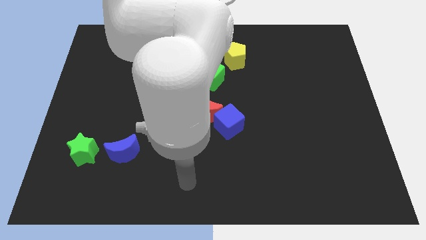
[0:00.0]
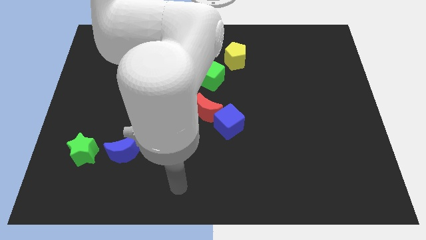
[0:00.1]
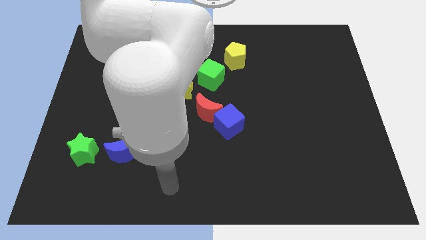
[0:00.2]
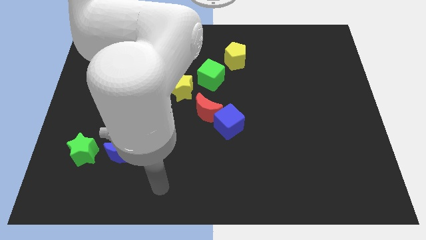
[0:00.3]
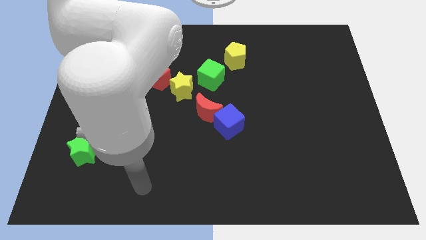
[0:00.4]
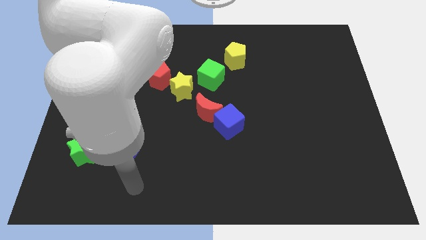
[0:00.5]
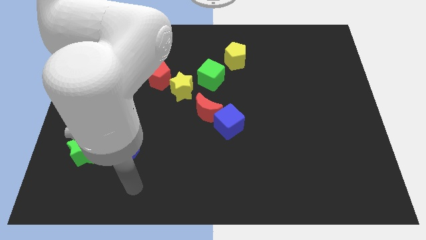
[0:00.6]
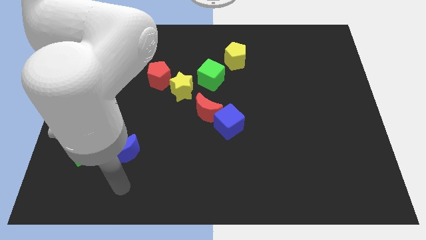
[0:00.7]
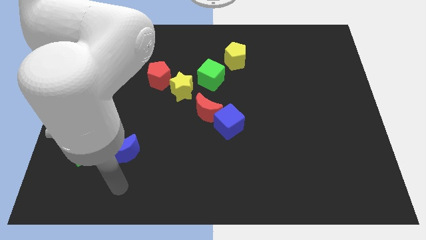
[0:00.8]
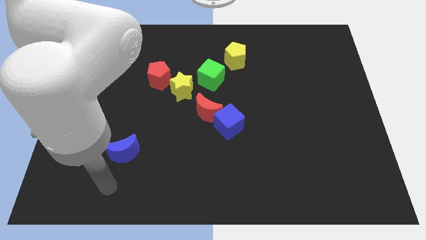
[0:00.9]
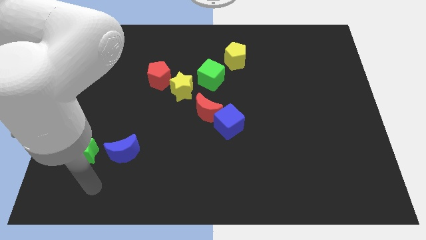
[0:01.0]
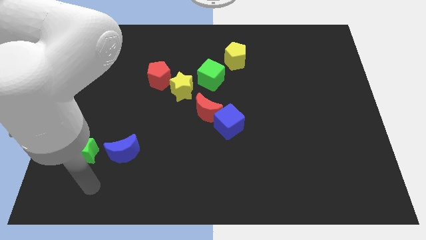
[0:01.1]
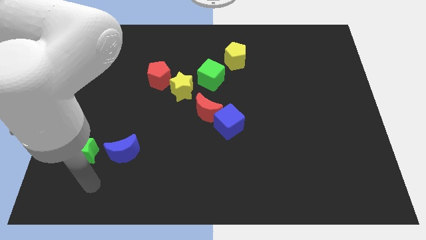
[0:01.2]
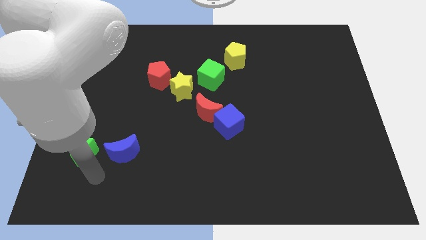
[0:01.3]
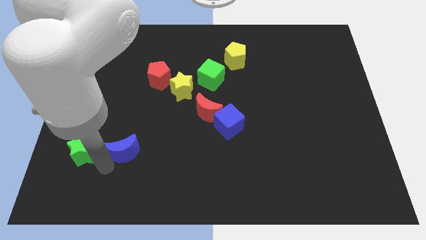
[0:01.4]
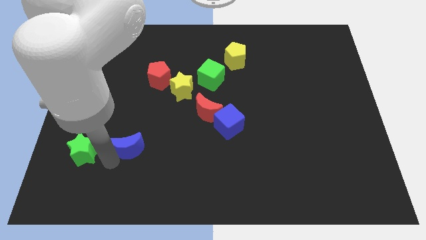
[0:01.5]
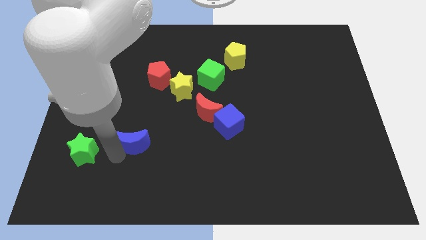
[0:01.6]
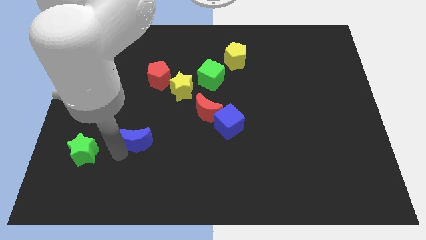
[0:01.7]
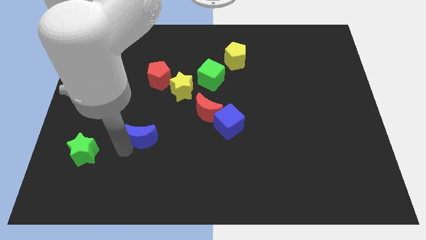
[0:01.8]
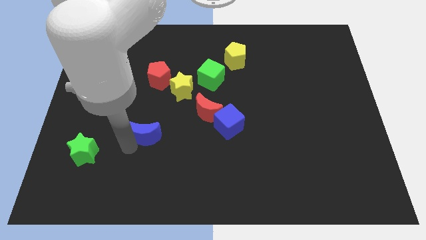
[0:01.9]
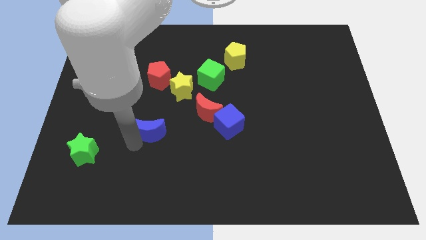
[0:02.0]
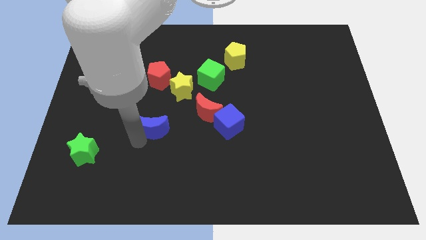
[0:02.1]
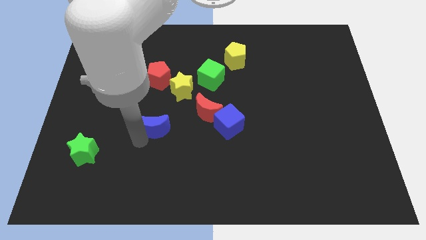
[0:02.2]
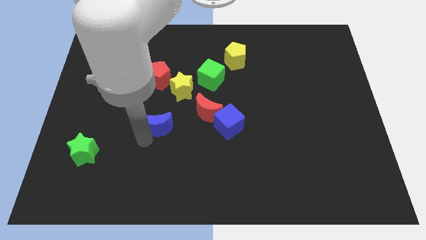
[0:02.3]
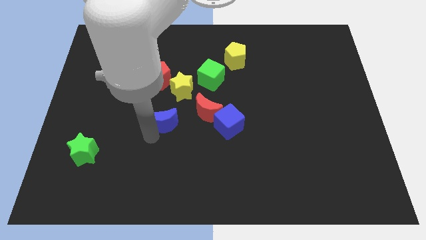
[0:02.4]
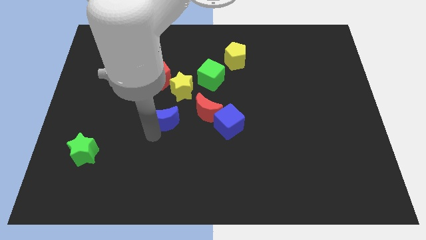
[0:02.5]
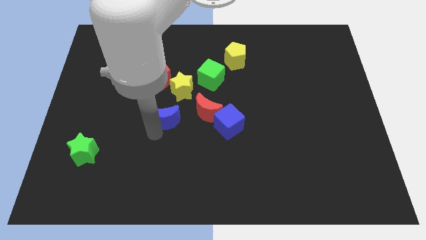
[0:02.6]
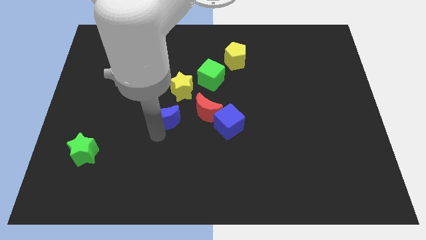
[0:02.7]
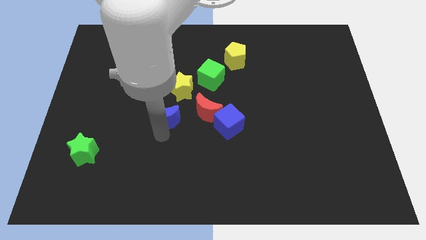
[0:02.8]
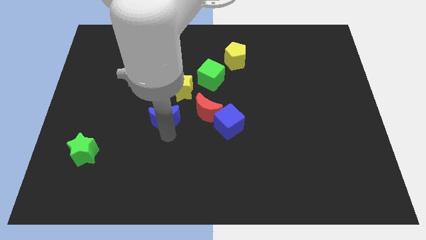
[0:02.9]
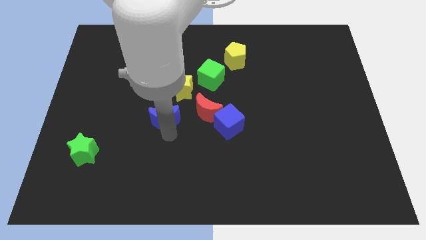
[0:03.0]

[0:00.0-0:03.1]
move the blue moon to the left side of the red moon

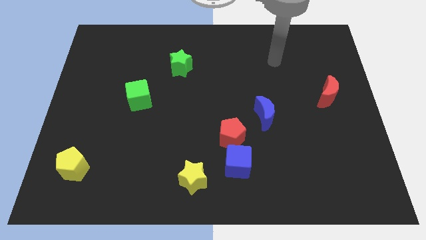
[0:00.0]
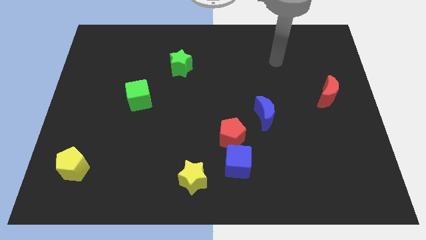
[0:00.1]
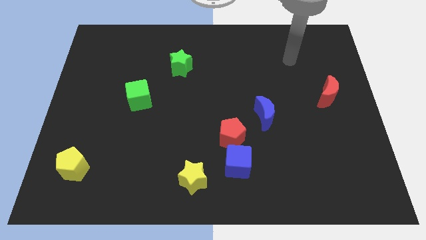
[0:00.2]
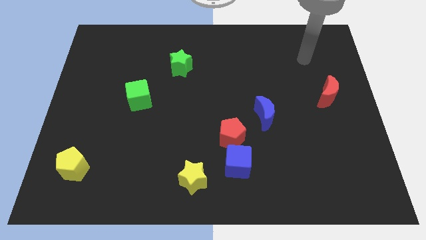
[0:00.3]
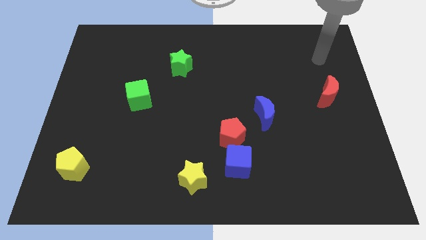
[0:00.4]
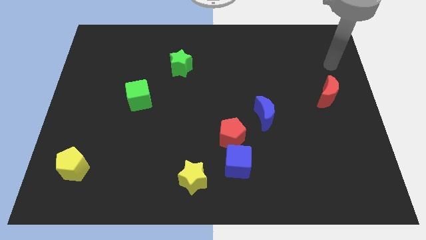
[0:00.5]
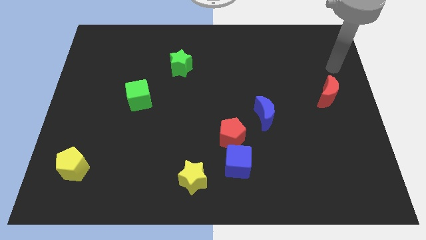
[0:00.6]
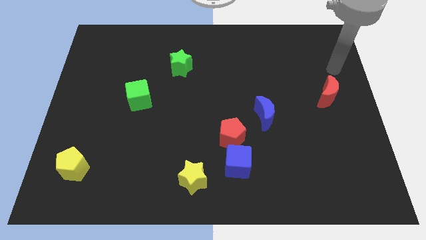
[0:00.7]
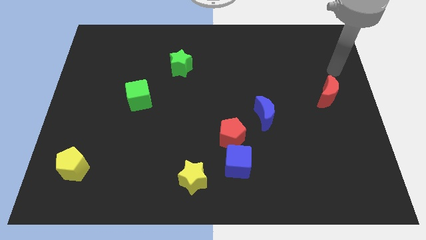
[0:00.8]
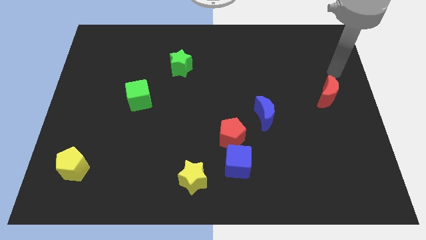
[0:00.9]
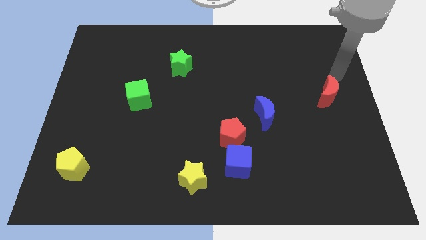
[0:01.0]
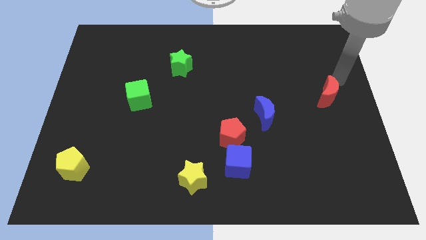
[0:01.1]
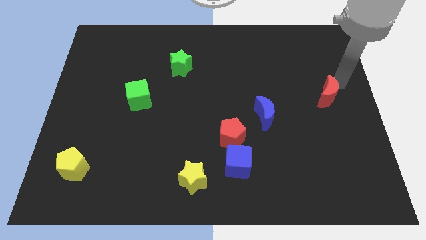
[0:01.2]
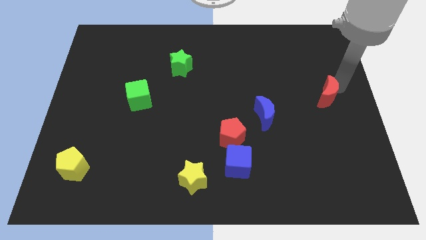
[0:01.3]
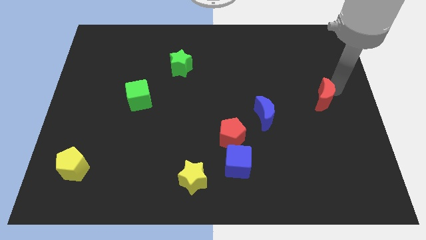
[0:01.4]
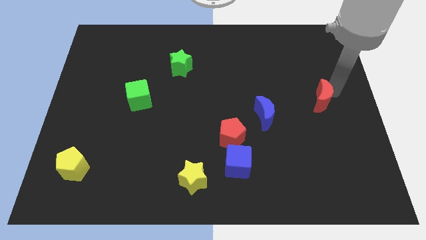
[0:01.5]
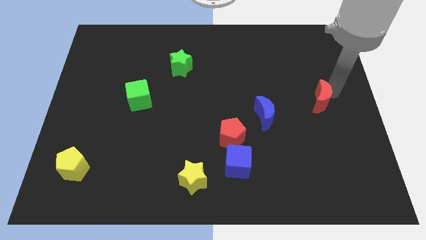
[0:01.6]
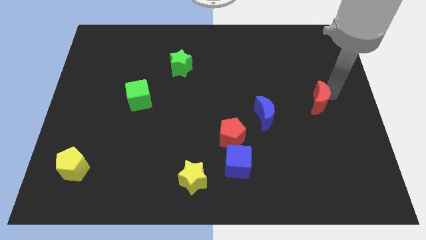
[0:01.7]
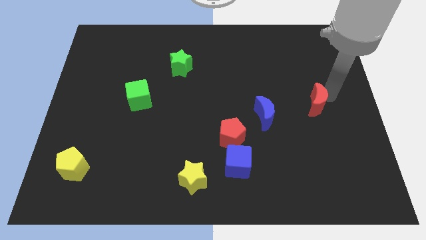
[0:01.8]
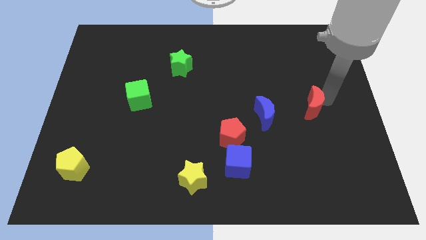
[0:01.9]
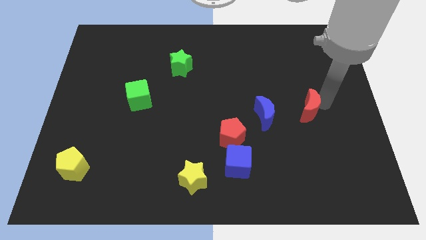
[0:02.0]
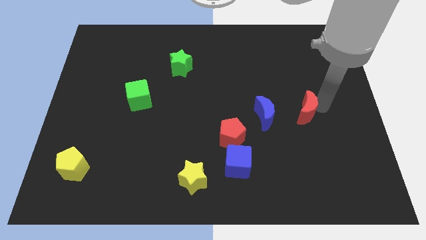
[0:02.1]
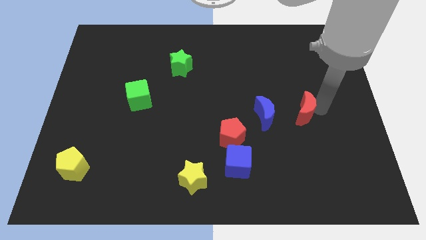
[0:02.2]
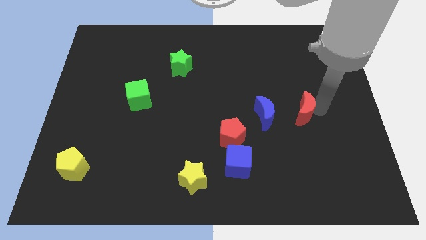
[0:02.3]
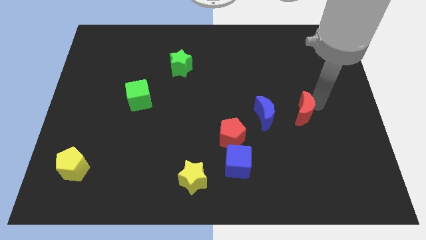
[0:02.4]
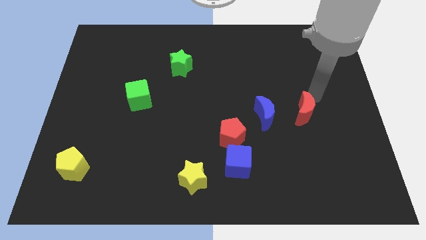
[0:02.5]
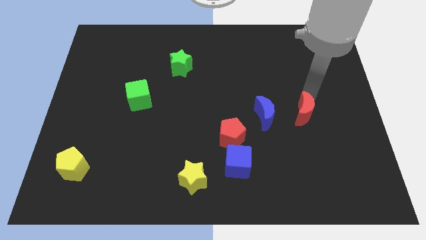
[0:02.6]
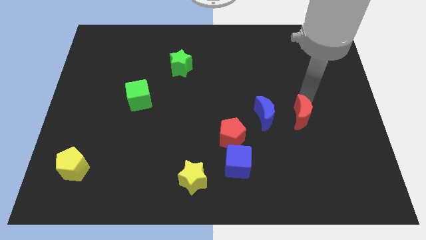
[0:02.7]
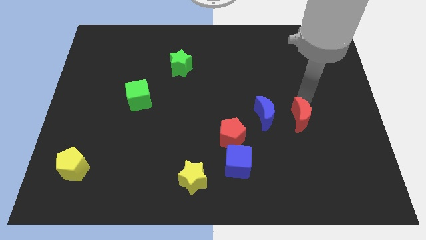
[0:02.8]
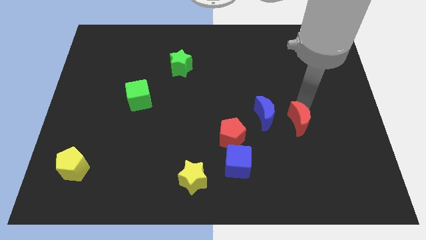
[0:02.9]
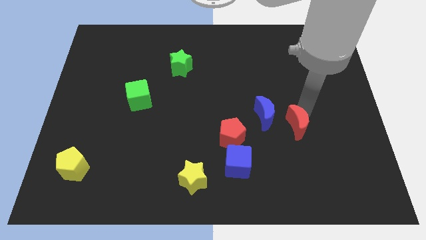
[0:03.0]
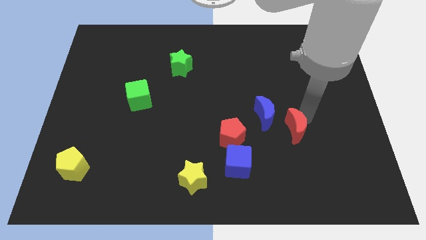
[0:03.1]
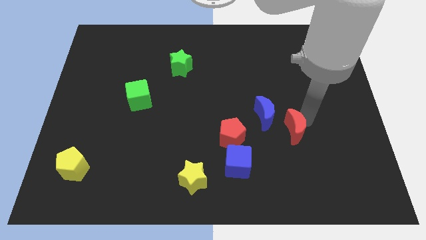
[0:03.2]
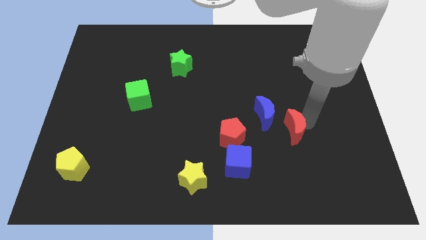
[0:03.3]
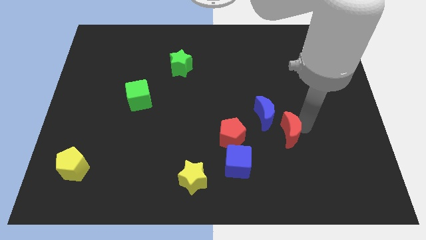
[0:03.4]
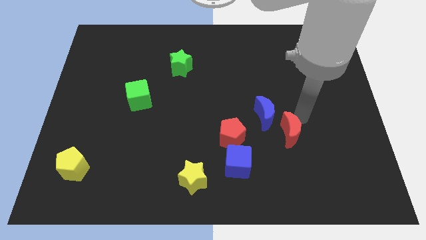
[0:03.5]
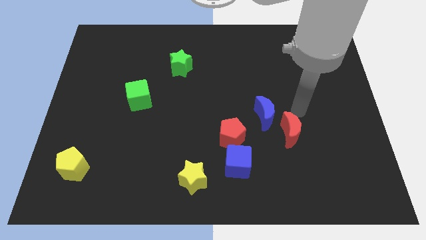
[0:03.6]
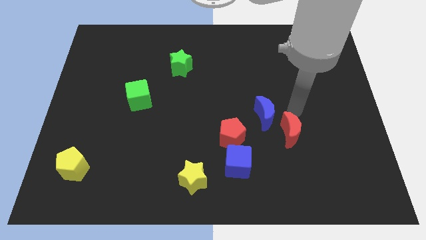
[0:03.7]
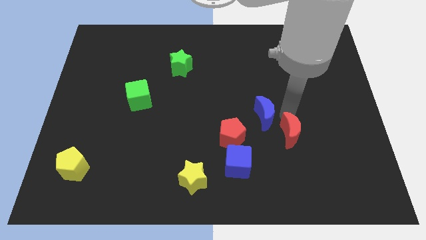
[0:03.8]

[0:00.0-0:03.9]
push the red moon to the bottom right side of the blue moon

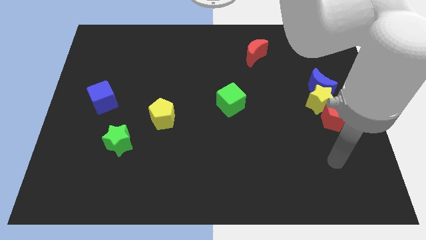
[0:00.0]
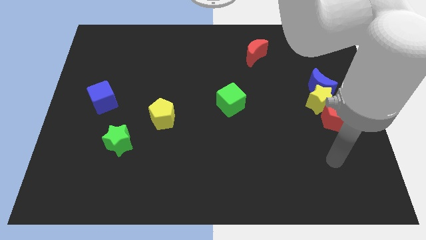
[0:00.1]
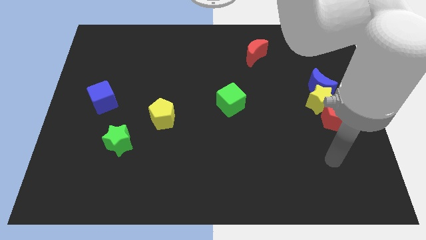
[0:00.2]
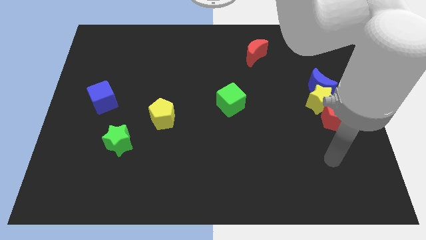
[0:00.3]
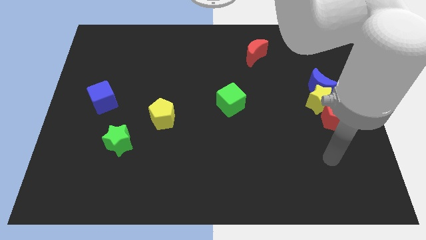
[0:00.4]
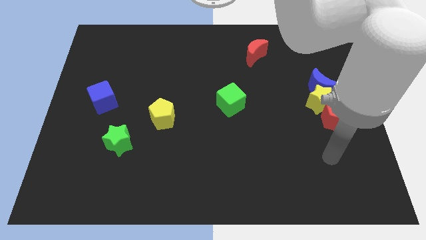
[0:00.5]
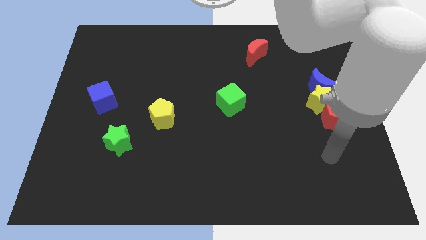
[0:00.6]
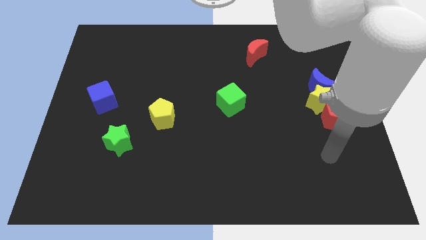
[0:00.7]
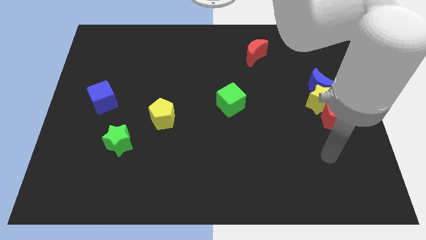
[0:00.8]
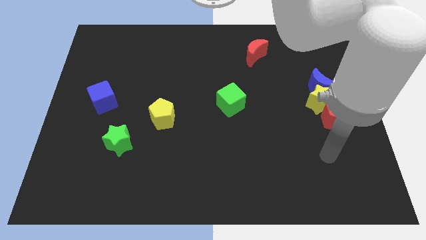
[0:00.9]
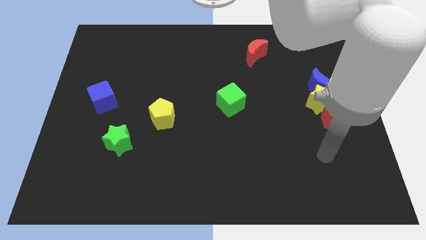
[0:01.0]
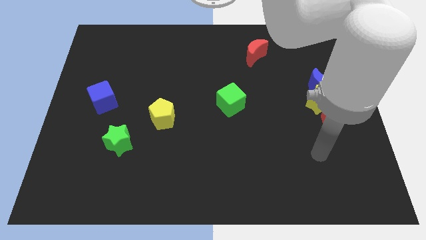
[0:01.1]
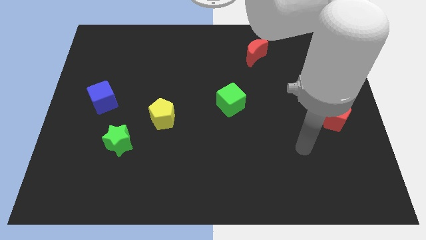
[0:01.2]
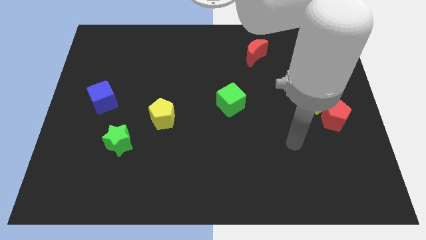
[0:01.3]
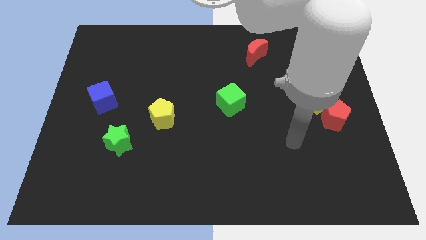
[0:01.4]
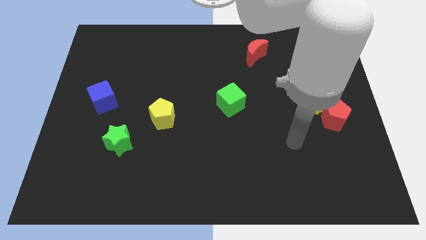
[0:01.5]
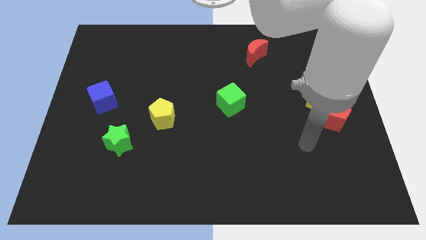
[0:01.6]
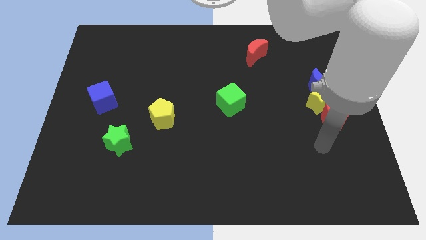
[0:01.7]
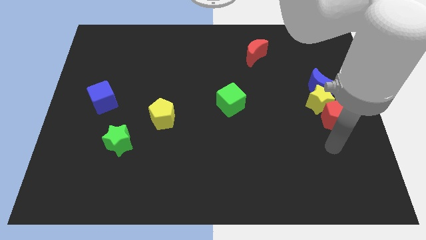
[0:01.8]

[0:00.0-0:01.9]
move your arm close to the red pentagon
